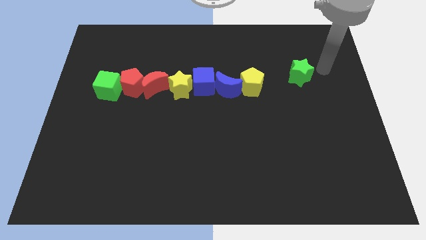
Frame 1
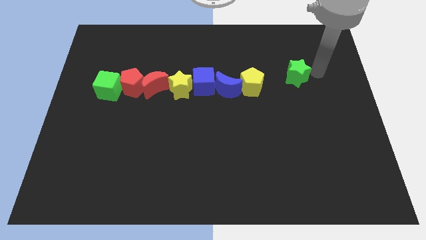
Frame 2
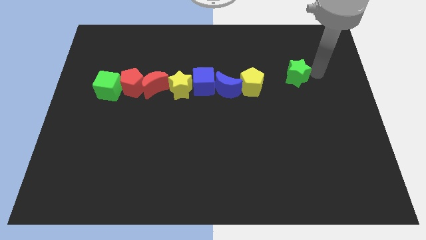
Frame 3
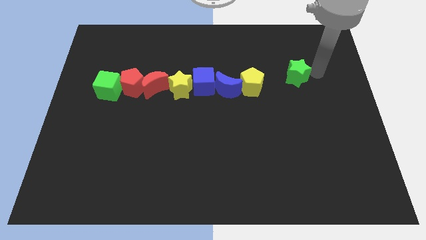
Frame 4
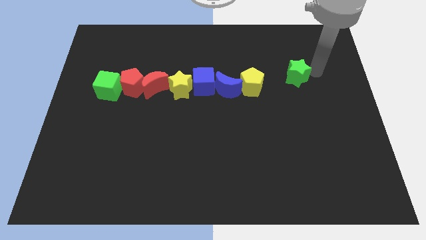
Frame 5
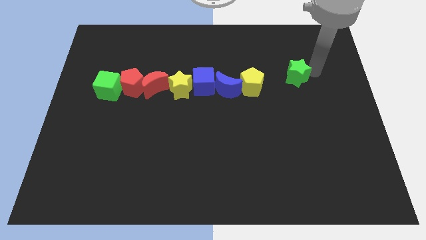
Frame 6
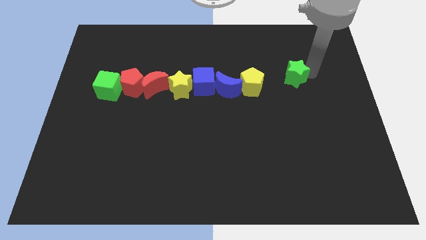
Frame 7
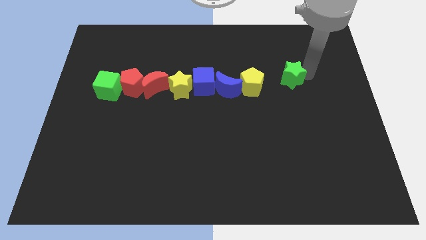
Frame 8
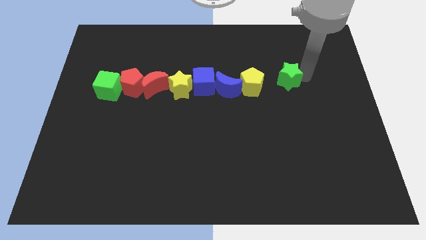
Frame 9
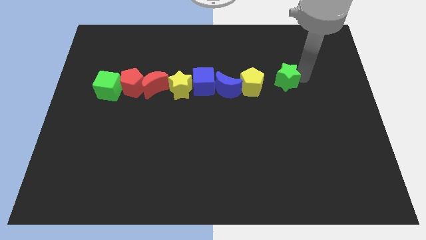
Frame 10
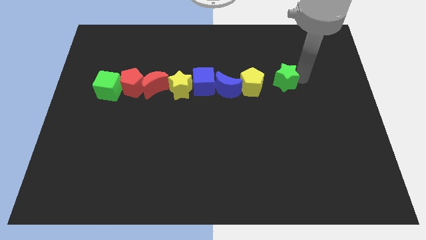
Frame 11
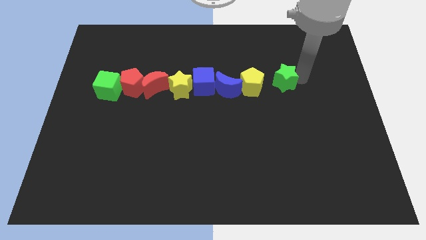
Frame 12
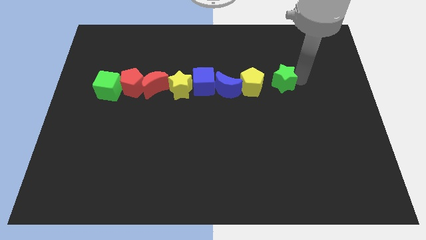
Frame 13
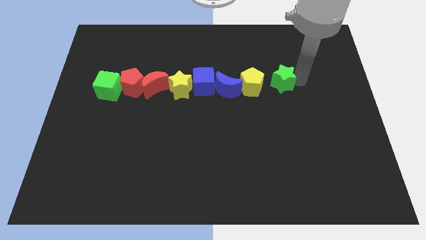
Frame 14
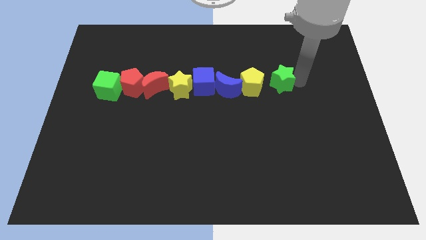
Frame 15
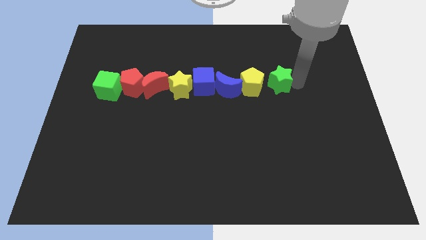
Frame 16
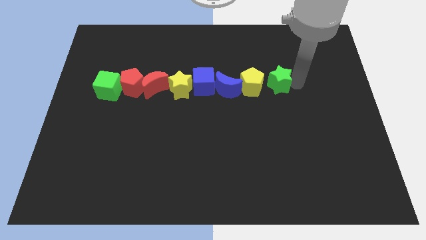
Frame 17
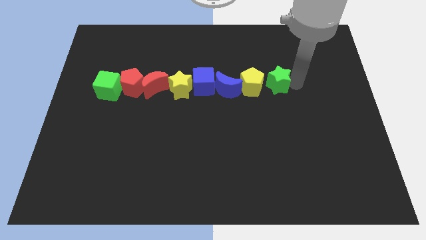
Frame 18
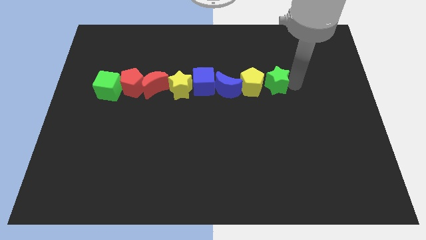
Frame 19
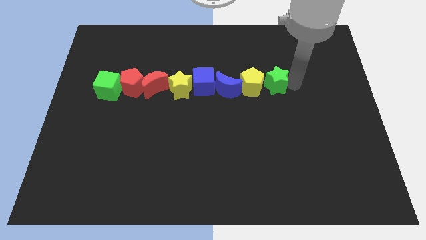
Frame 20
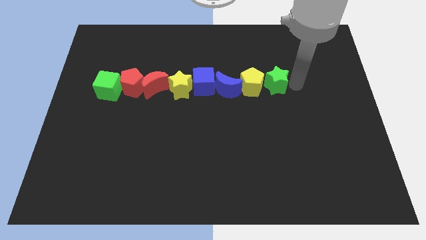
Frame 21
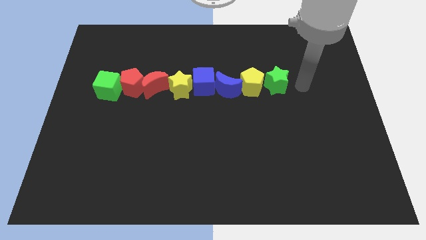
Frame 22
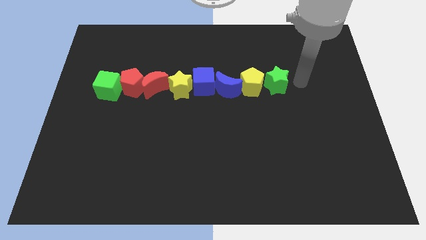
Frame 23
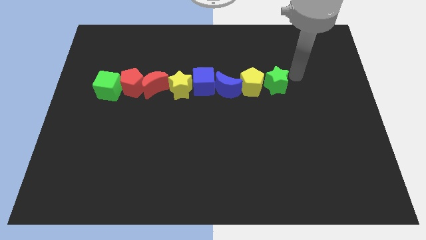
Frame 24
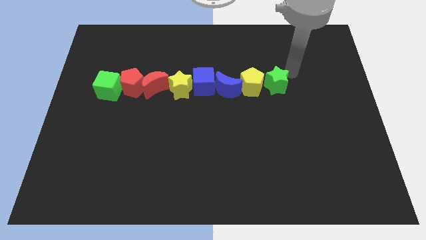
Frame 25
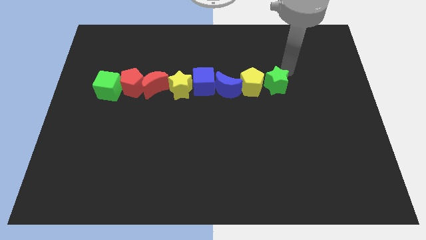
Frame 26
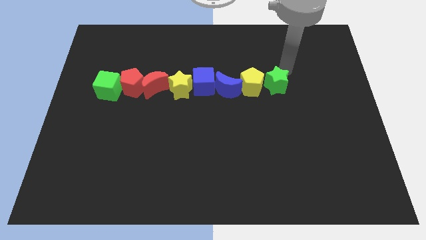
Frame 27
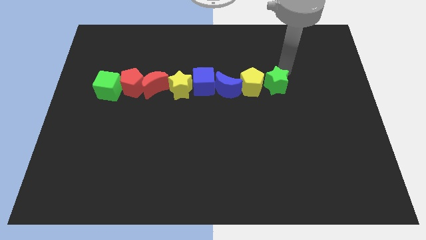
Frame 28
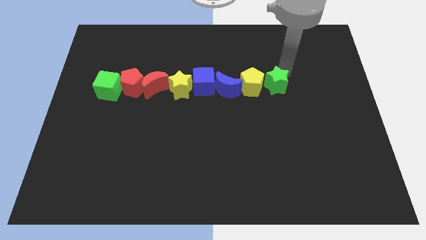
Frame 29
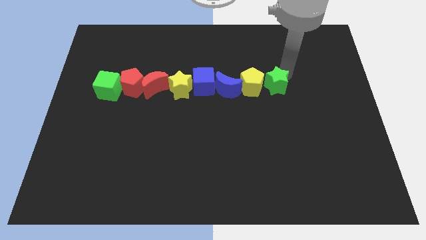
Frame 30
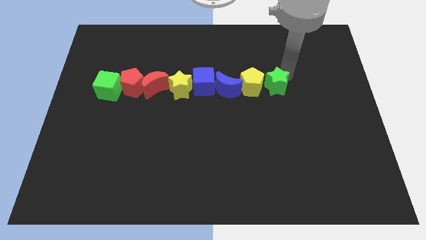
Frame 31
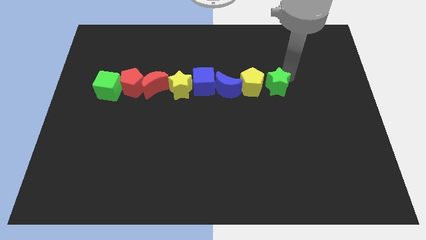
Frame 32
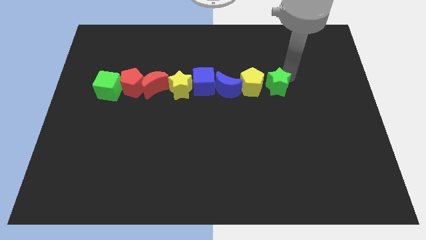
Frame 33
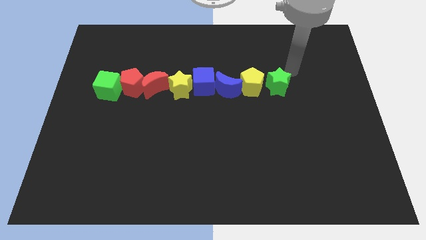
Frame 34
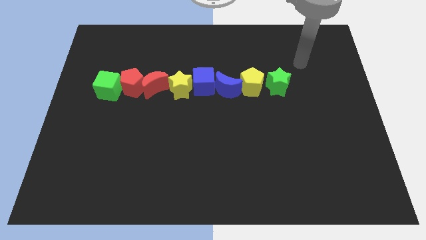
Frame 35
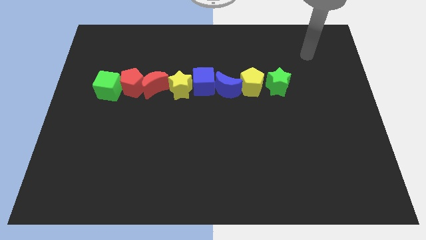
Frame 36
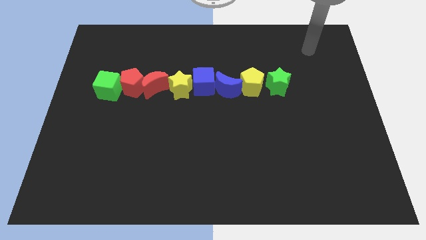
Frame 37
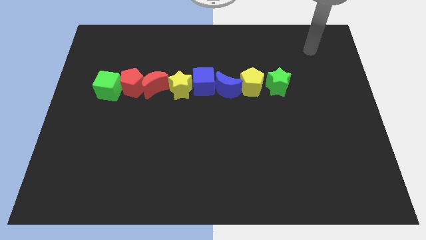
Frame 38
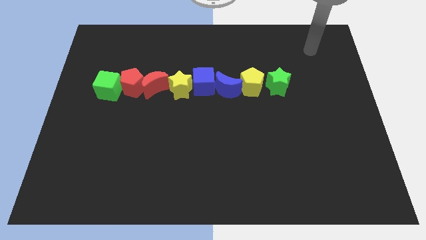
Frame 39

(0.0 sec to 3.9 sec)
arrange the green star on the right side of the yellow pentagon

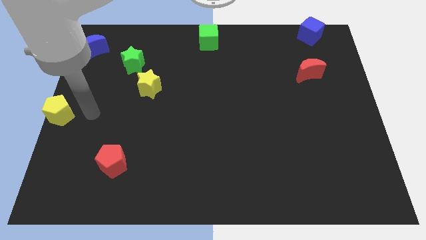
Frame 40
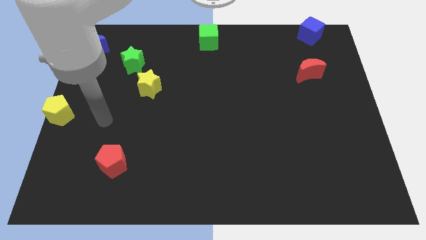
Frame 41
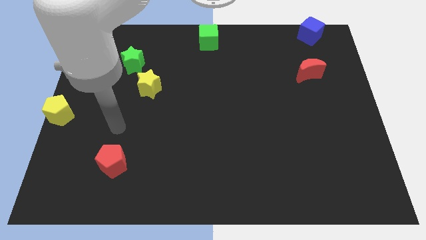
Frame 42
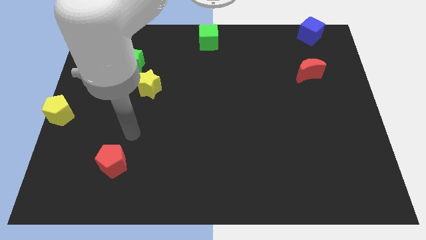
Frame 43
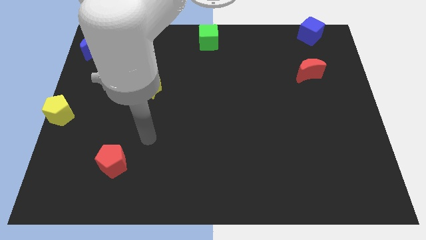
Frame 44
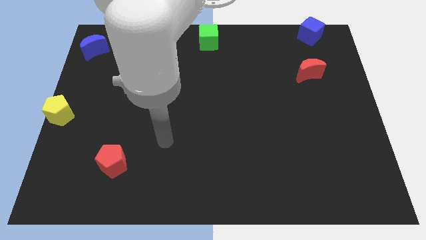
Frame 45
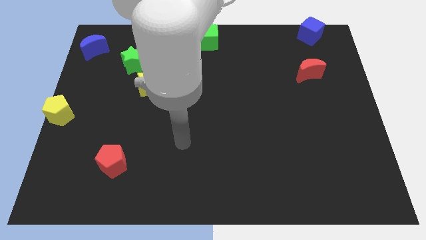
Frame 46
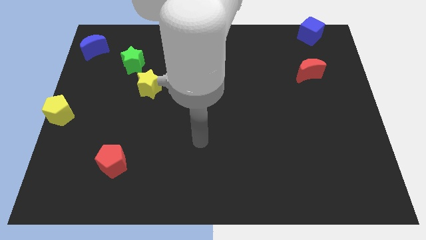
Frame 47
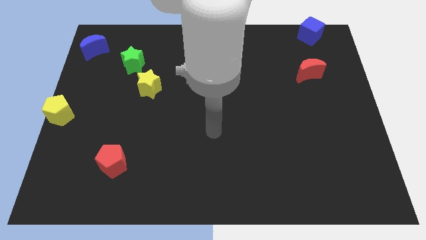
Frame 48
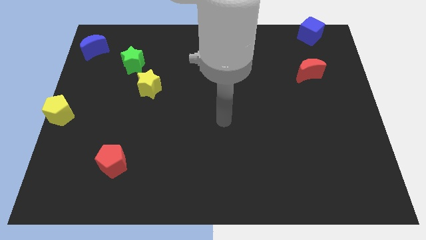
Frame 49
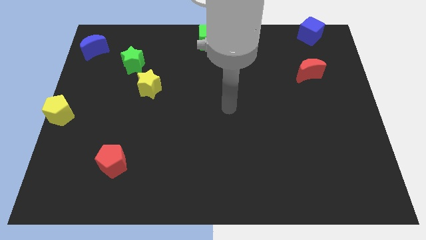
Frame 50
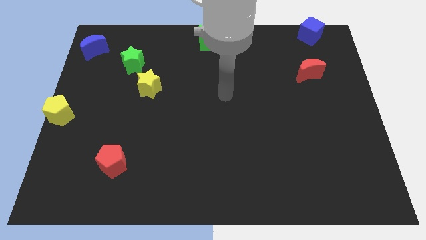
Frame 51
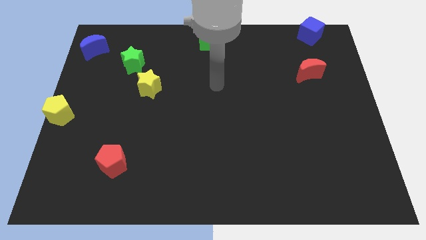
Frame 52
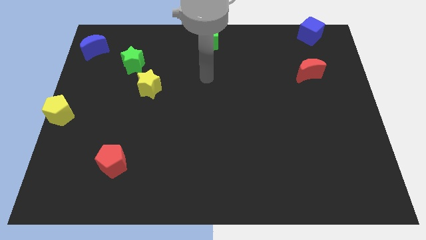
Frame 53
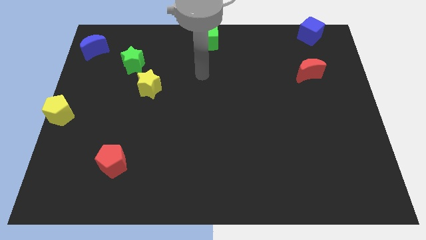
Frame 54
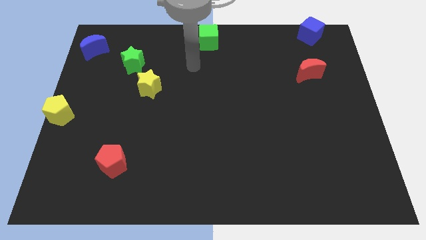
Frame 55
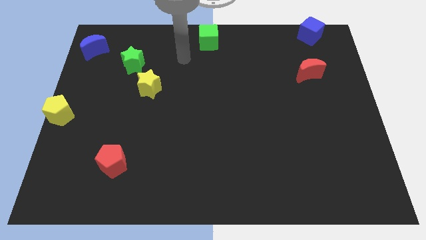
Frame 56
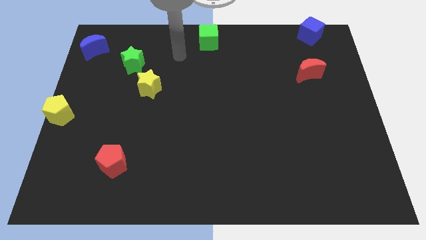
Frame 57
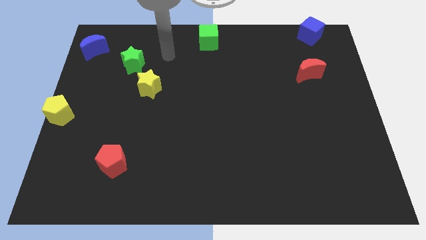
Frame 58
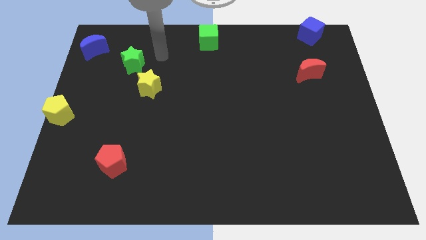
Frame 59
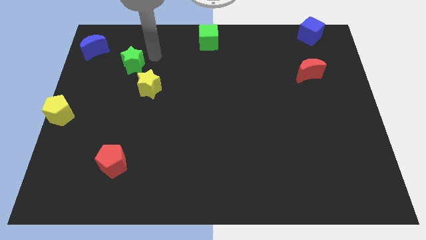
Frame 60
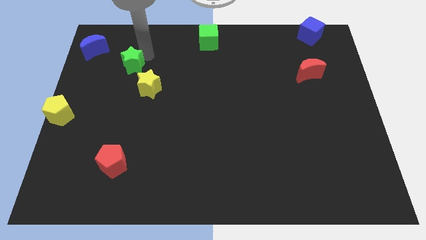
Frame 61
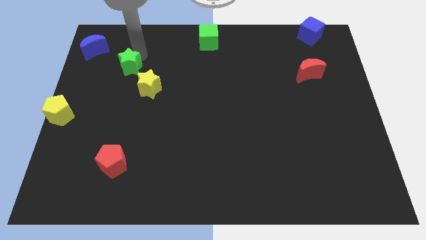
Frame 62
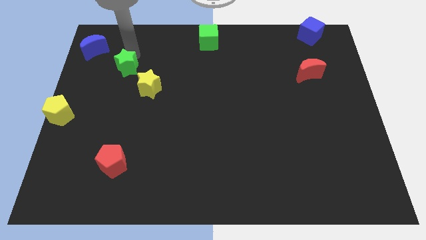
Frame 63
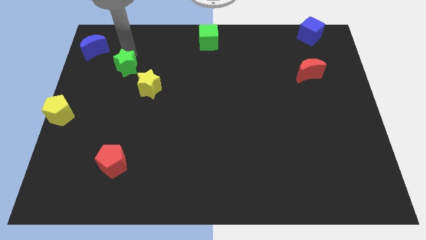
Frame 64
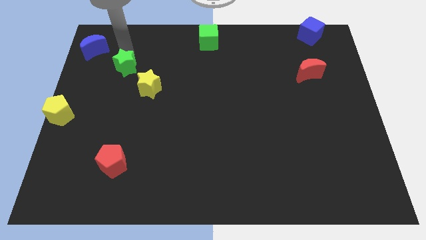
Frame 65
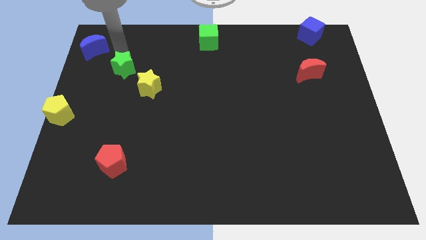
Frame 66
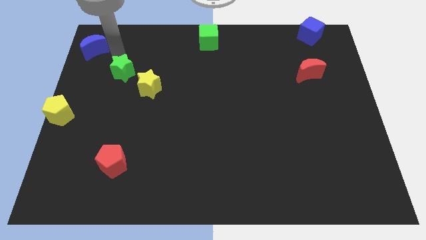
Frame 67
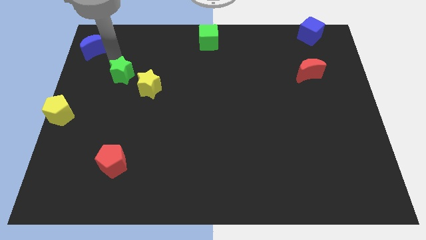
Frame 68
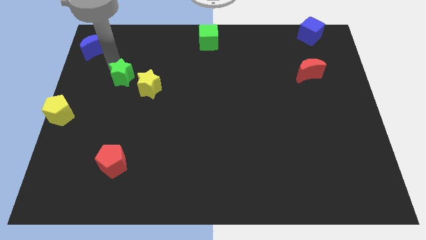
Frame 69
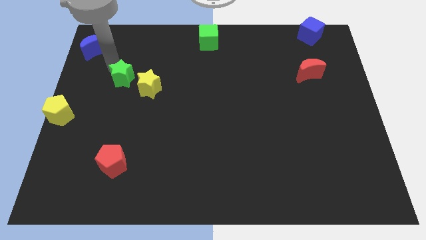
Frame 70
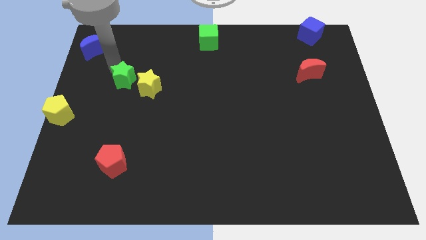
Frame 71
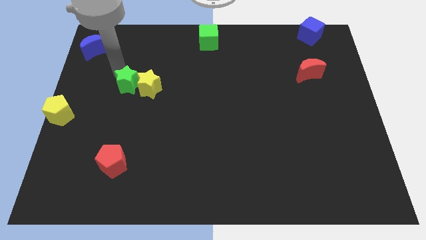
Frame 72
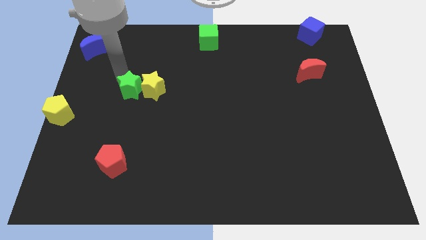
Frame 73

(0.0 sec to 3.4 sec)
place the green star to the left of the yellow star

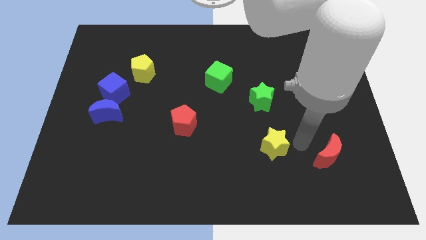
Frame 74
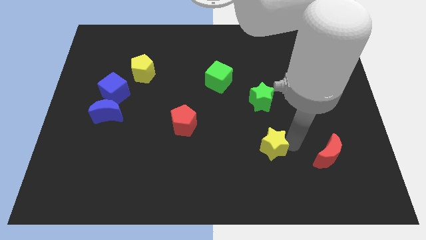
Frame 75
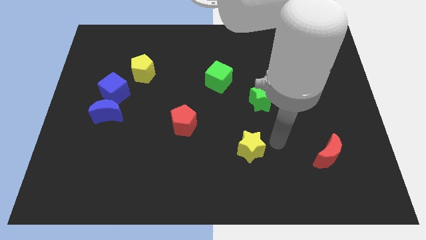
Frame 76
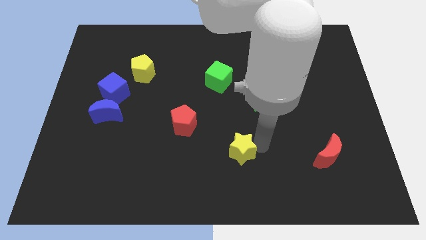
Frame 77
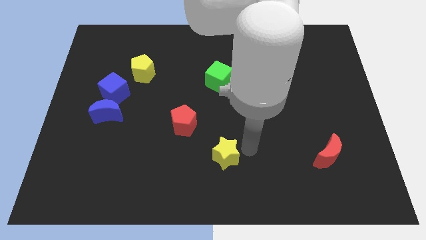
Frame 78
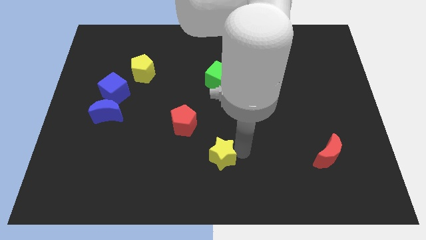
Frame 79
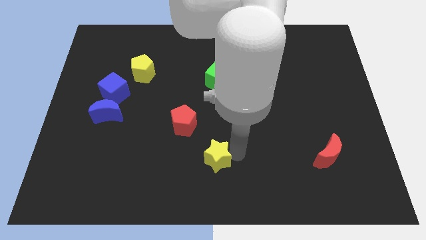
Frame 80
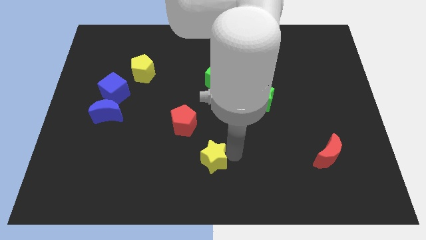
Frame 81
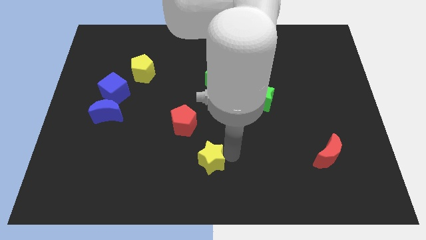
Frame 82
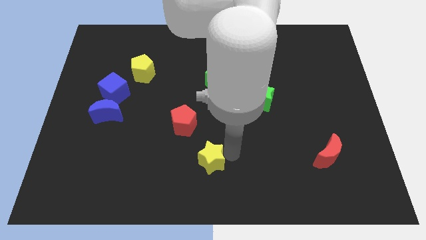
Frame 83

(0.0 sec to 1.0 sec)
push yellow star away from red crescent

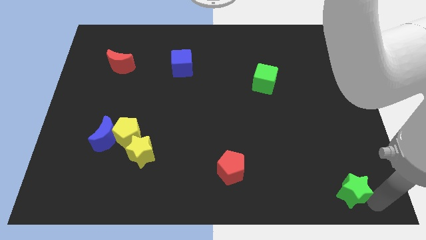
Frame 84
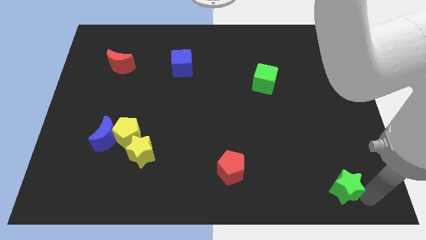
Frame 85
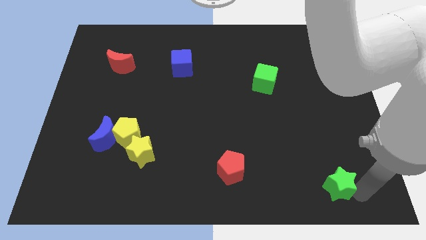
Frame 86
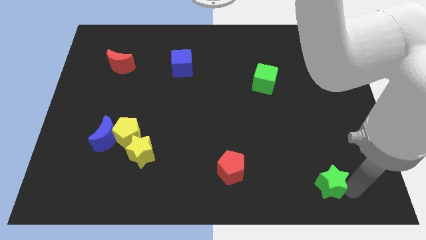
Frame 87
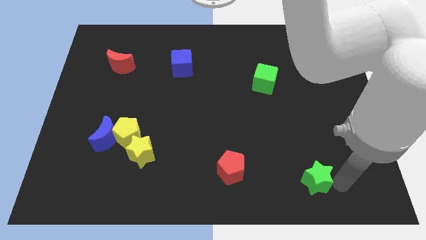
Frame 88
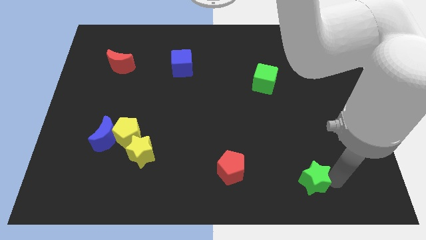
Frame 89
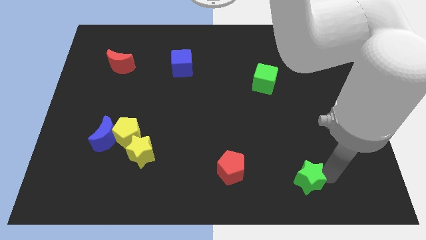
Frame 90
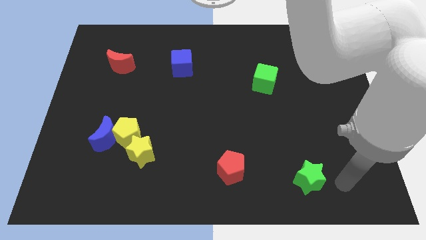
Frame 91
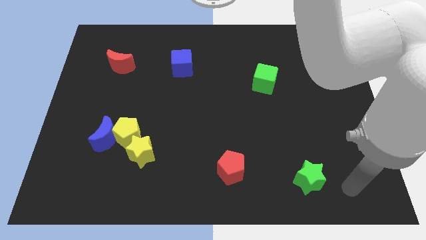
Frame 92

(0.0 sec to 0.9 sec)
push the green star towards the red pentagon
